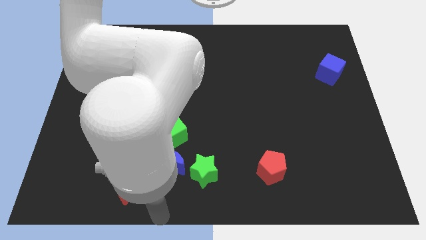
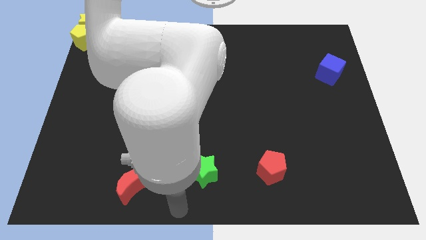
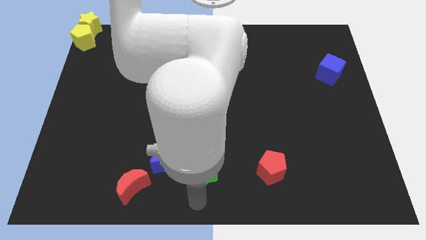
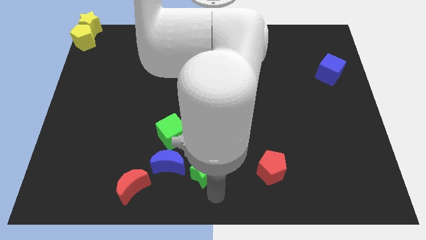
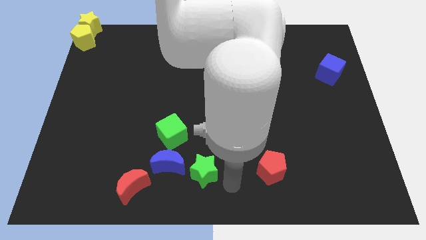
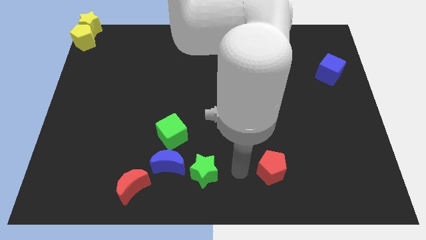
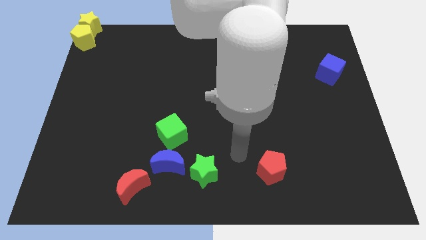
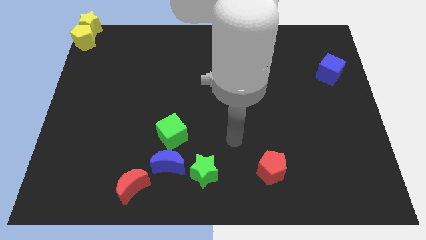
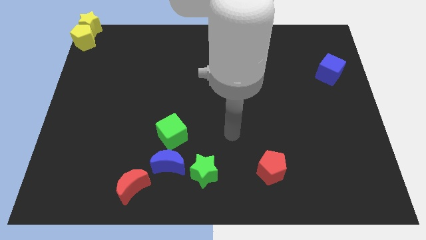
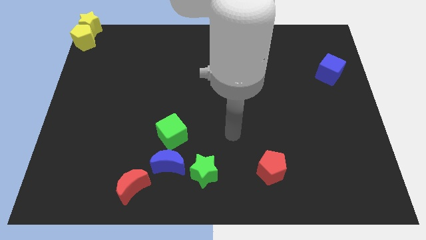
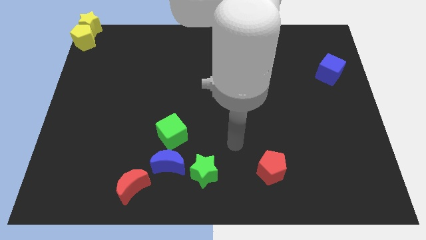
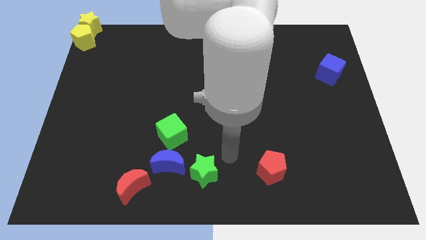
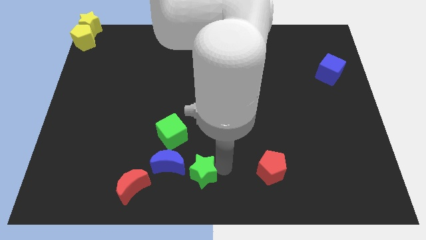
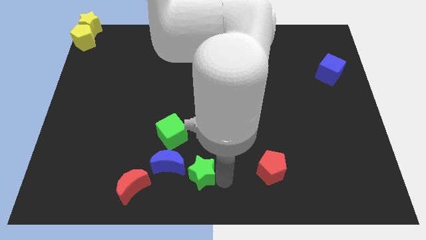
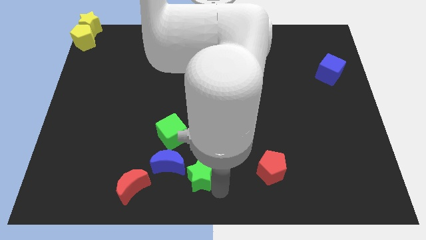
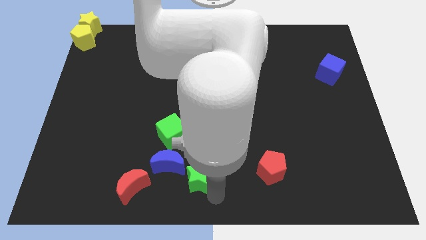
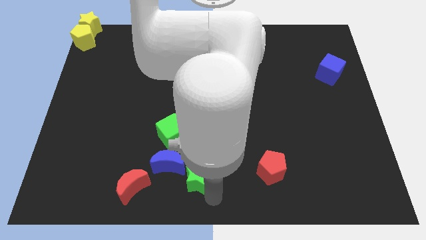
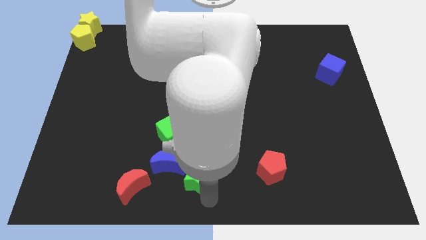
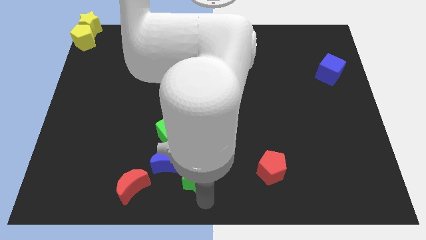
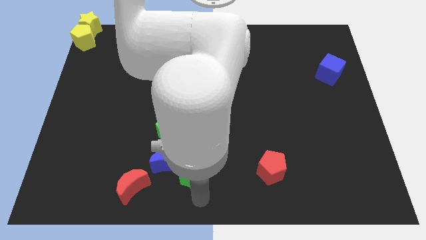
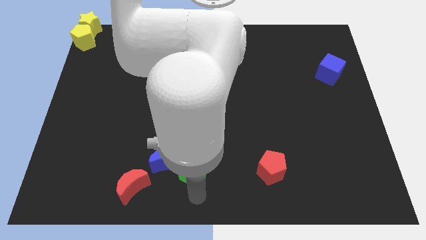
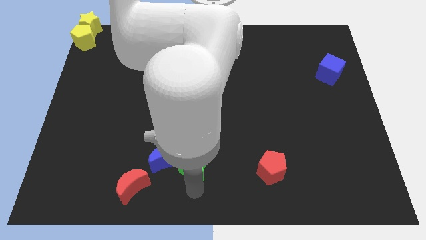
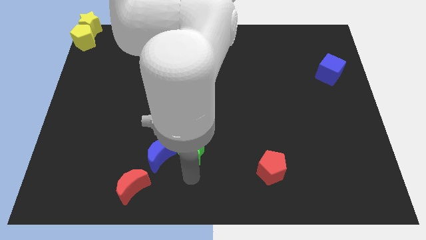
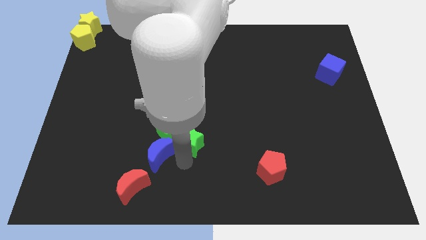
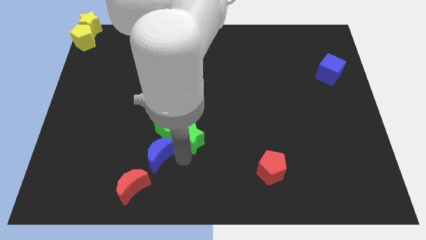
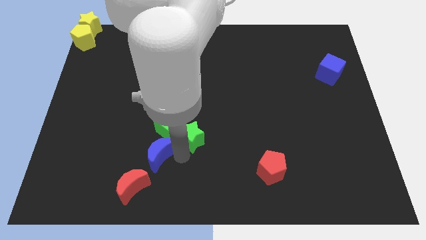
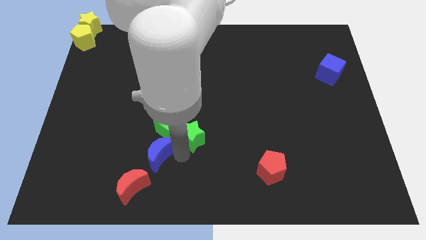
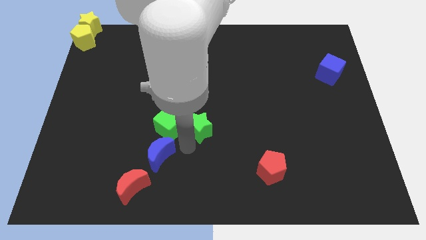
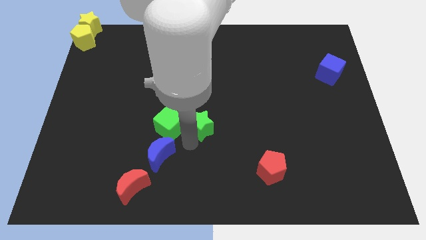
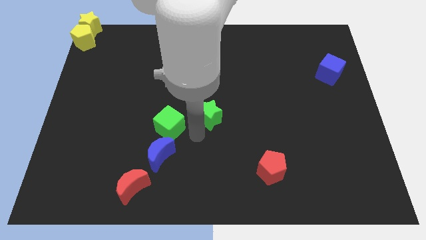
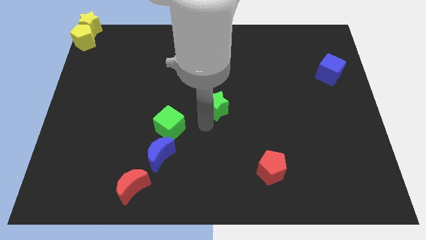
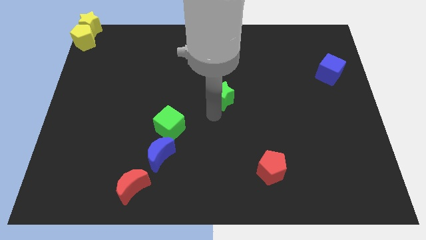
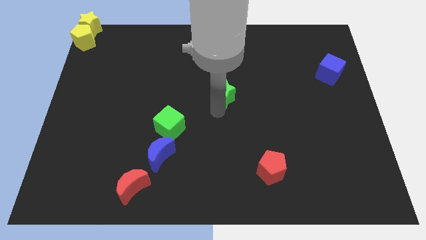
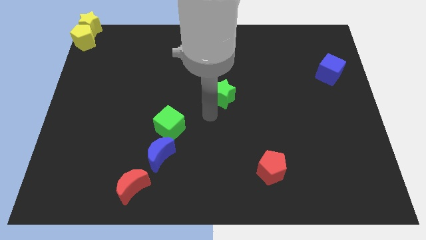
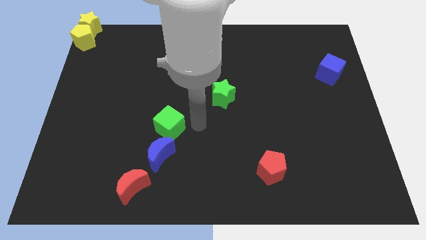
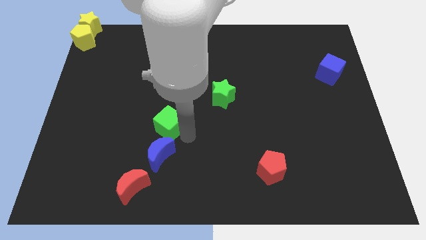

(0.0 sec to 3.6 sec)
place the green star above the green cube

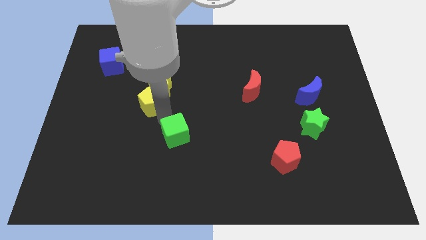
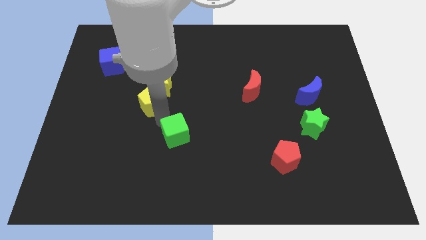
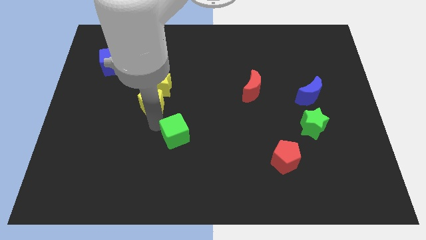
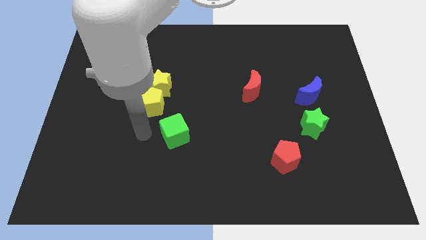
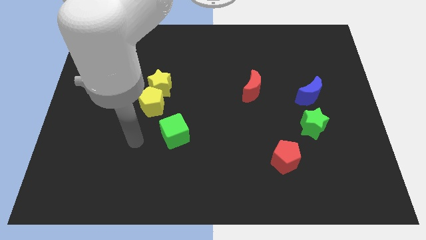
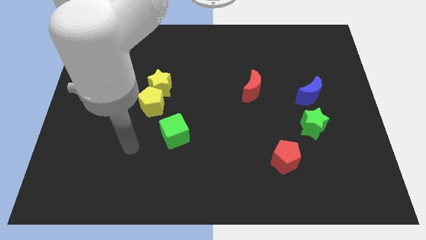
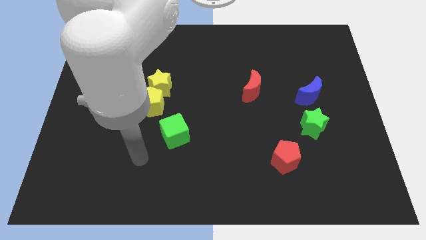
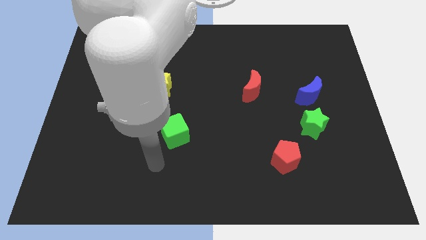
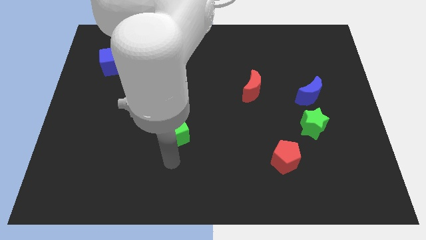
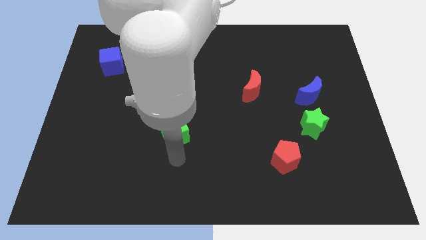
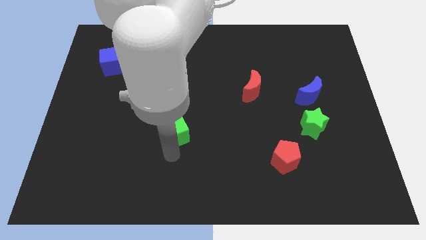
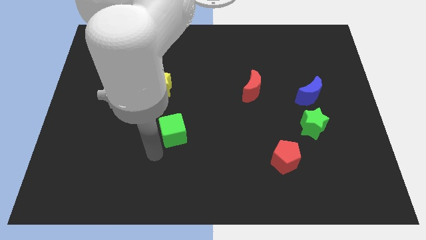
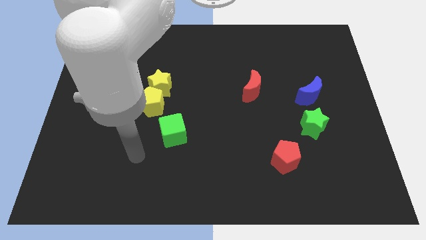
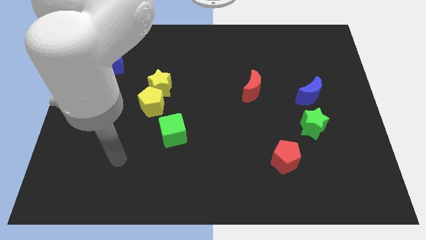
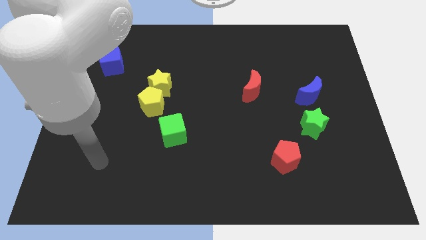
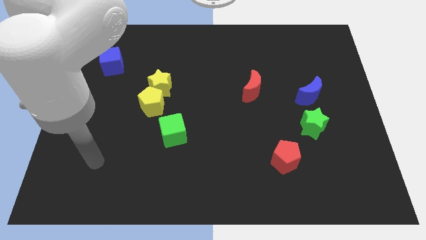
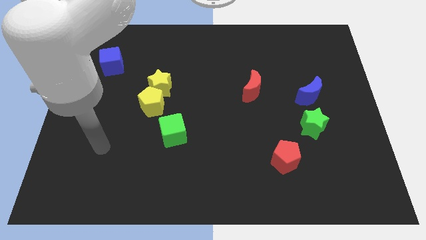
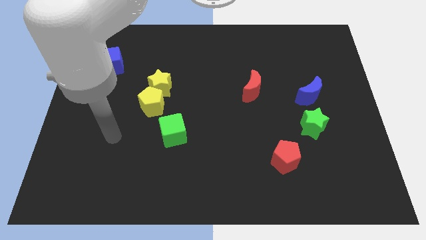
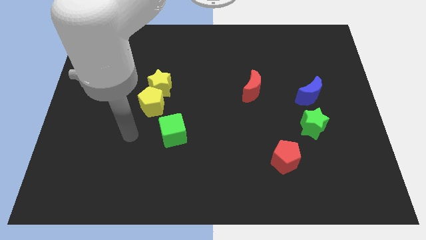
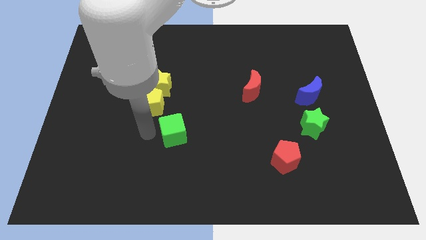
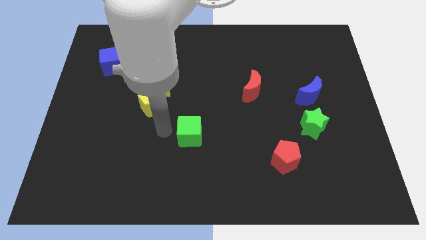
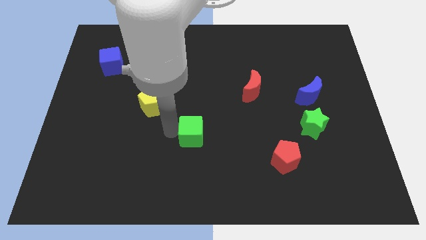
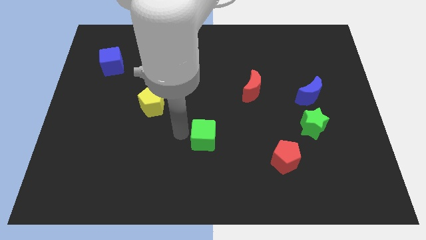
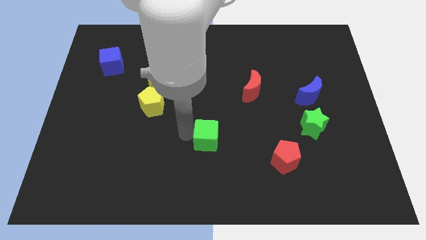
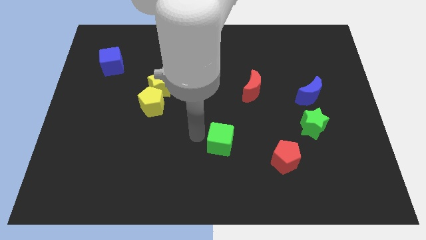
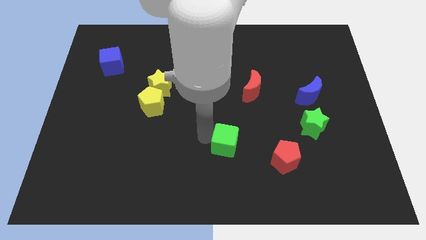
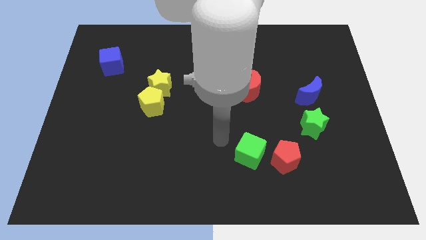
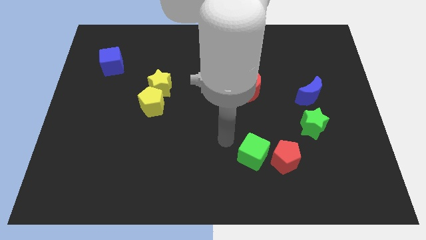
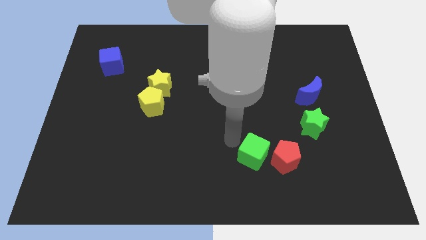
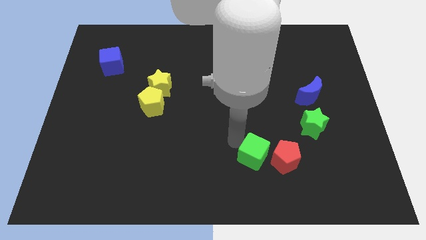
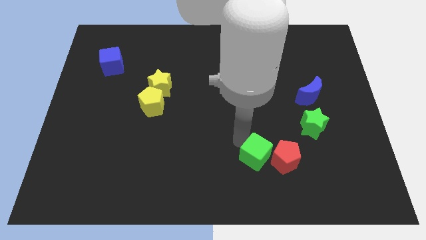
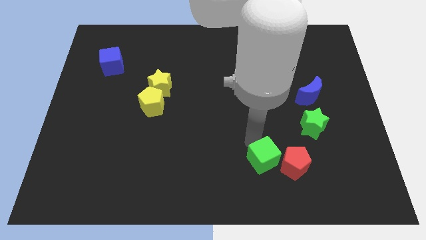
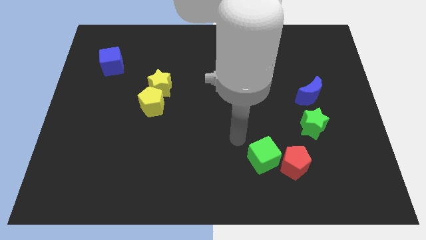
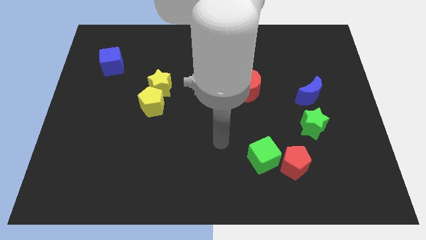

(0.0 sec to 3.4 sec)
push the green cube into the red pentagon

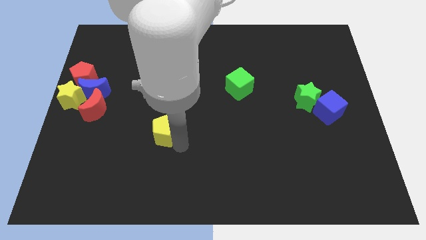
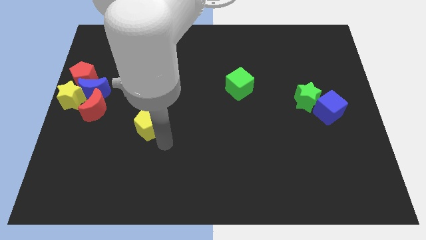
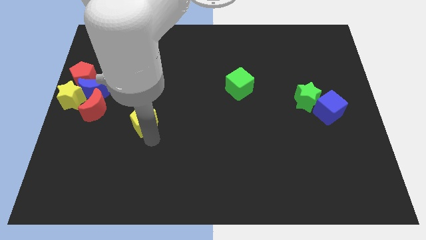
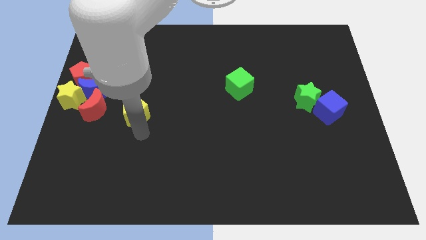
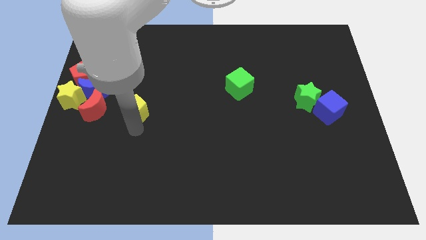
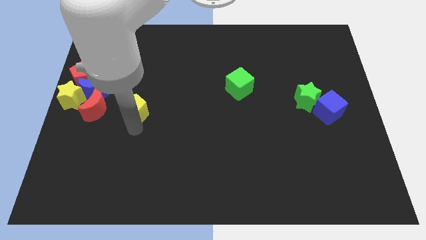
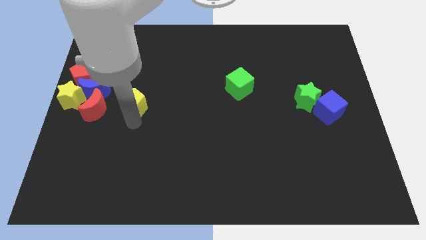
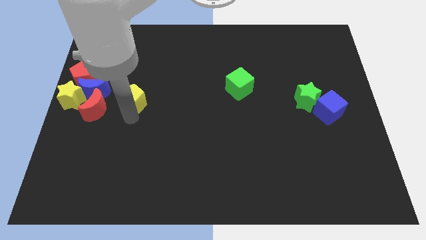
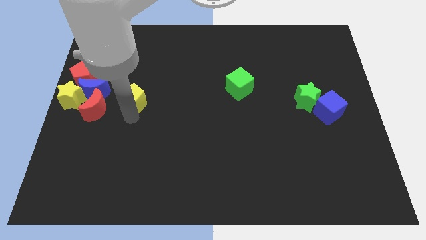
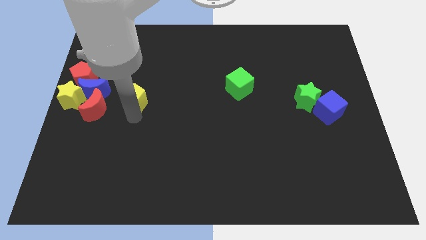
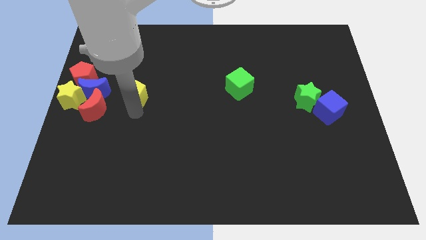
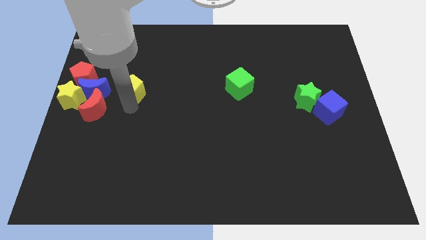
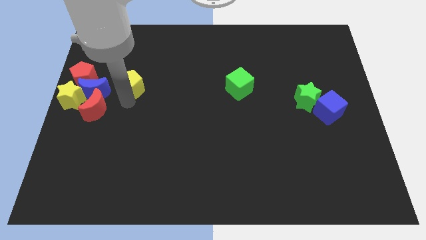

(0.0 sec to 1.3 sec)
push the yellow pentagon parallel right to the blue moon

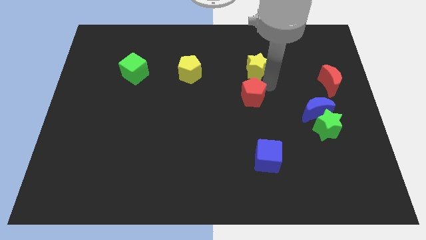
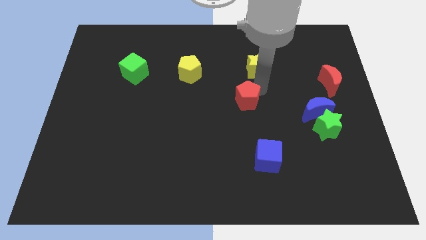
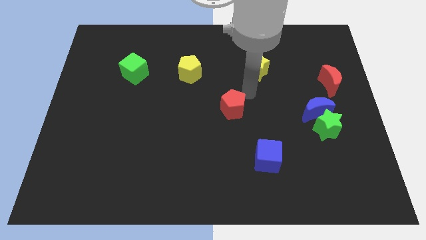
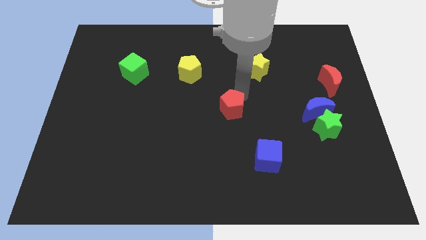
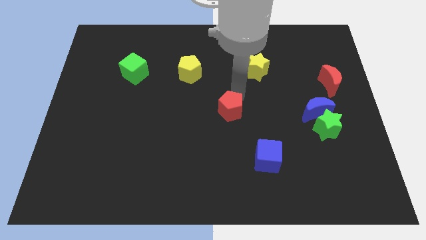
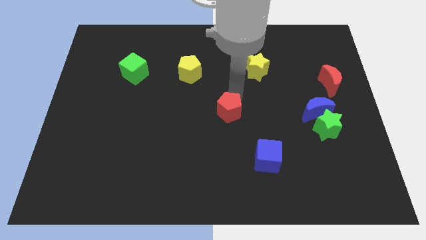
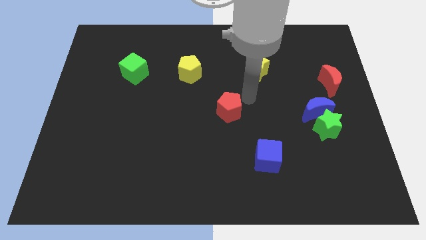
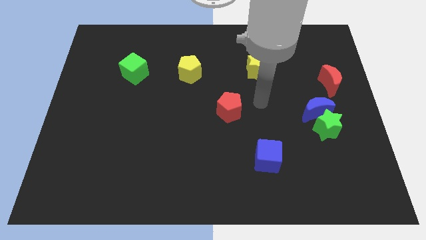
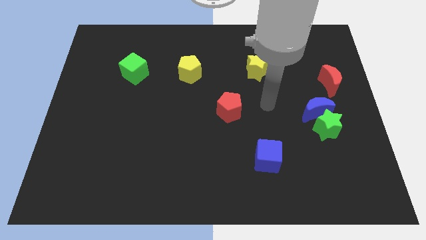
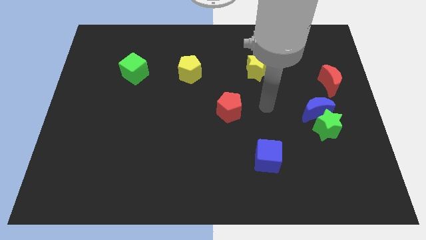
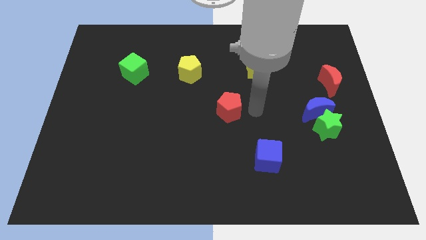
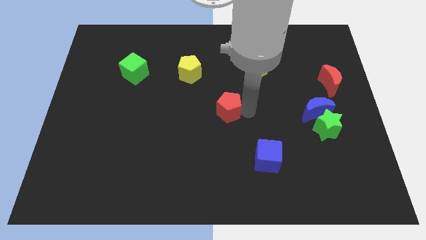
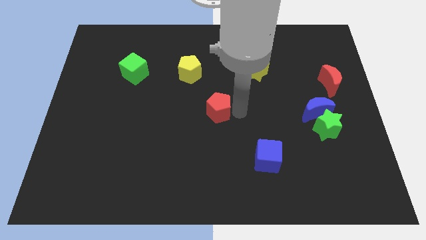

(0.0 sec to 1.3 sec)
move the red pentagon to the center of the board
